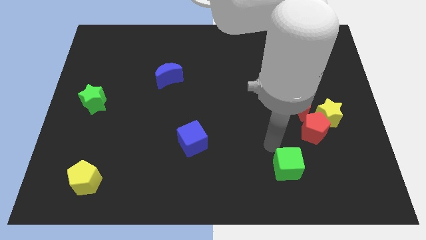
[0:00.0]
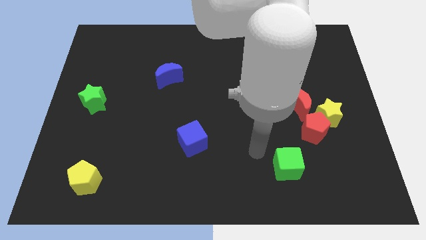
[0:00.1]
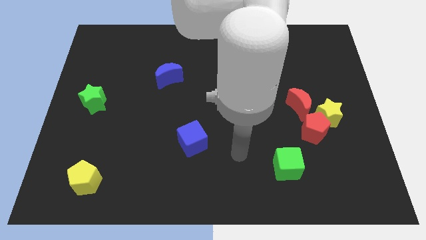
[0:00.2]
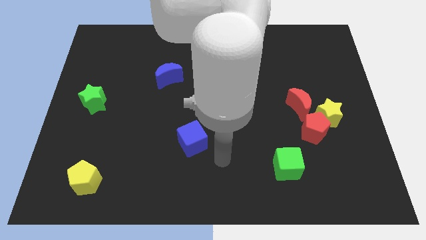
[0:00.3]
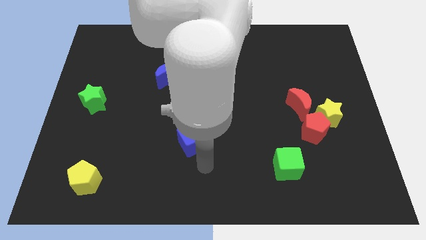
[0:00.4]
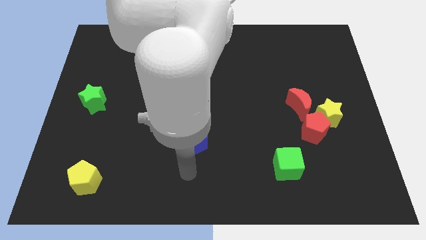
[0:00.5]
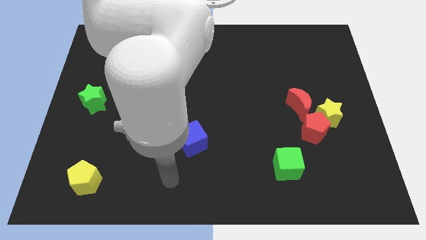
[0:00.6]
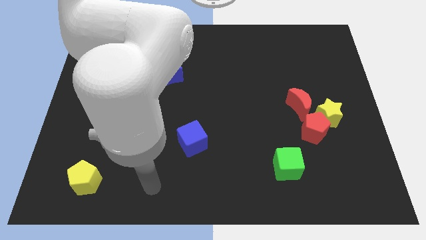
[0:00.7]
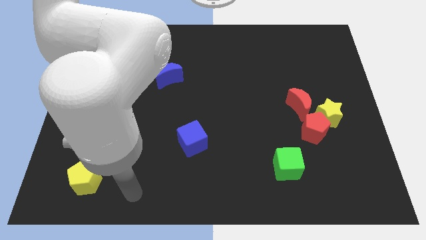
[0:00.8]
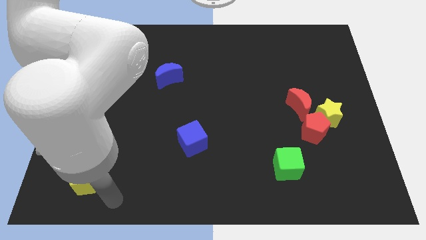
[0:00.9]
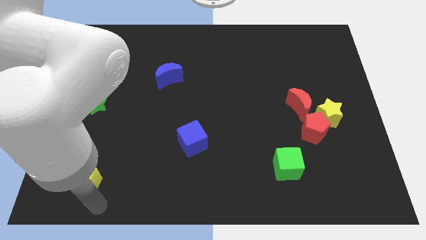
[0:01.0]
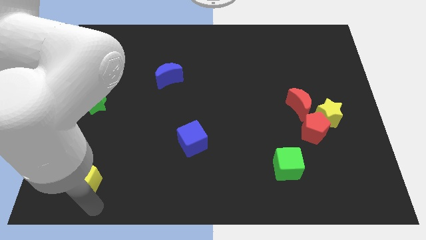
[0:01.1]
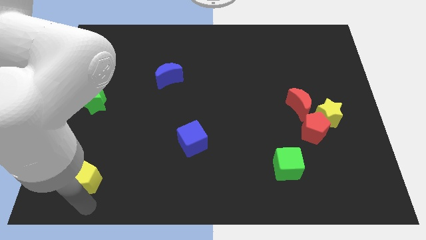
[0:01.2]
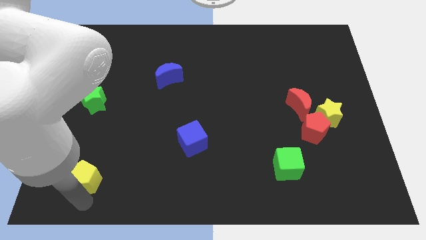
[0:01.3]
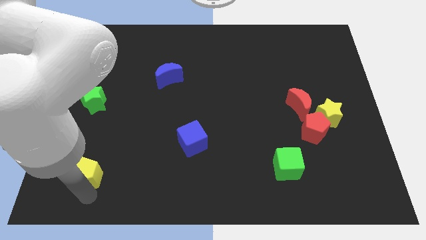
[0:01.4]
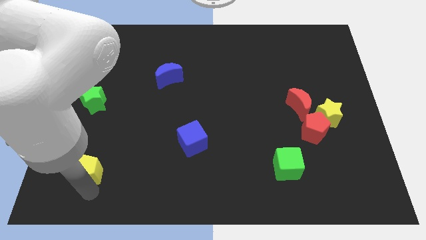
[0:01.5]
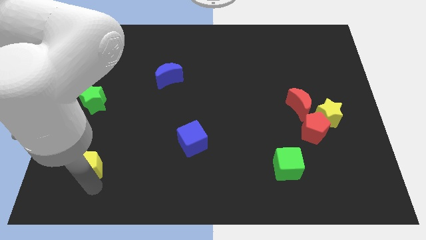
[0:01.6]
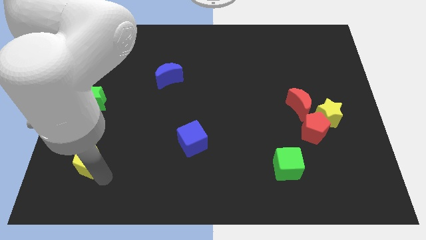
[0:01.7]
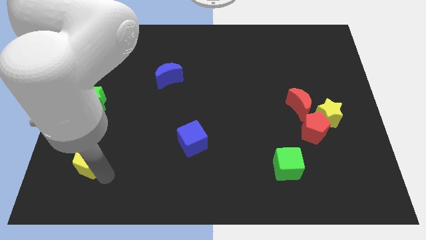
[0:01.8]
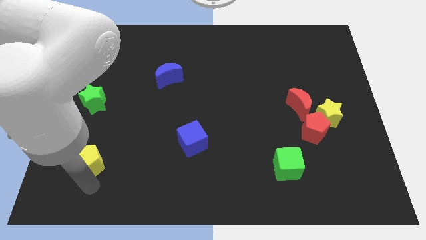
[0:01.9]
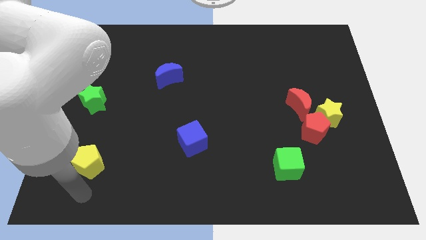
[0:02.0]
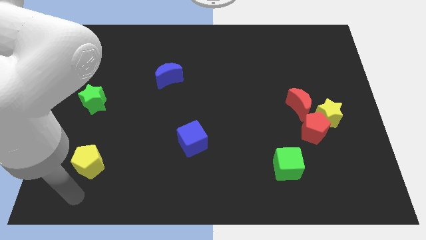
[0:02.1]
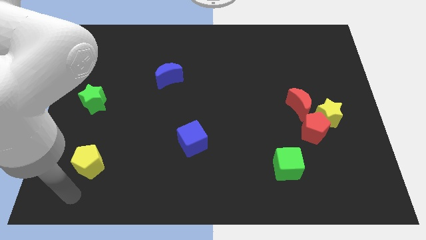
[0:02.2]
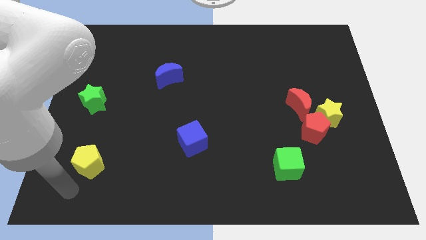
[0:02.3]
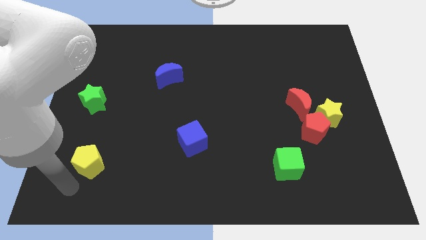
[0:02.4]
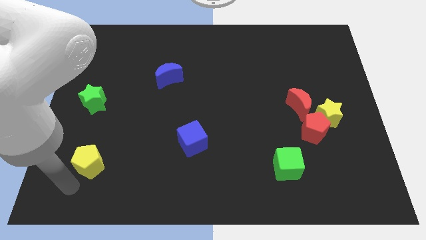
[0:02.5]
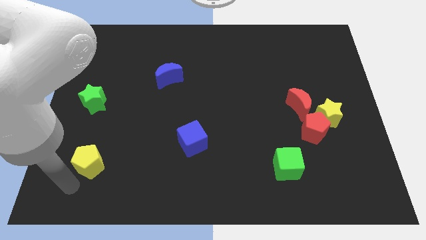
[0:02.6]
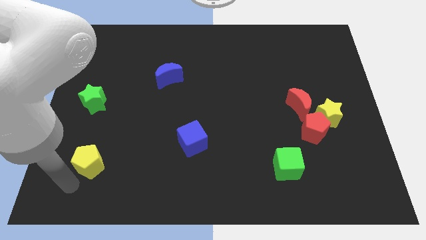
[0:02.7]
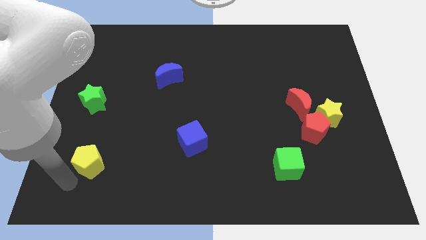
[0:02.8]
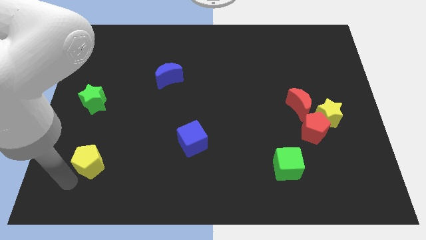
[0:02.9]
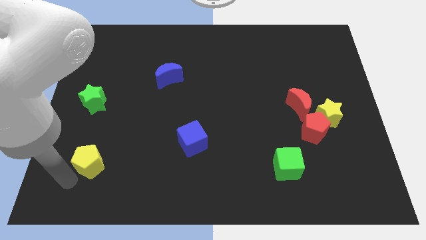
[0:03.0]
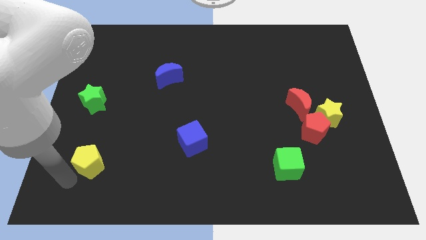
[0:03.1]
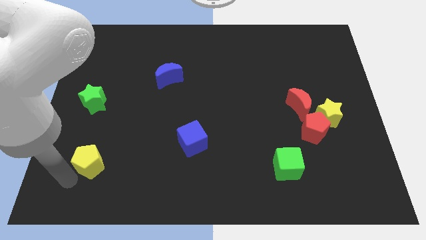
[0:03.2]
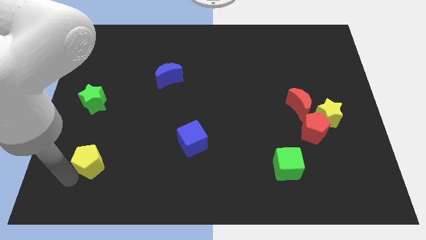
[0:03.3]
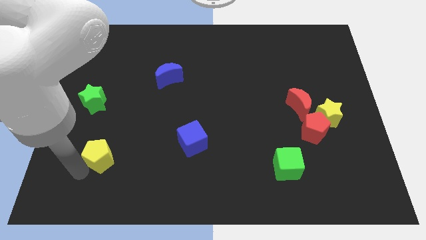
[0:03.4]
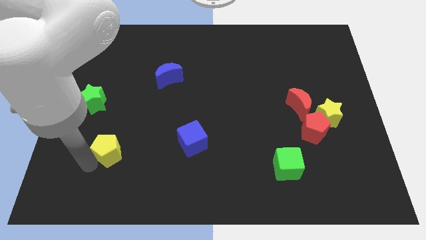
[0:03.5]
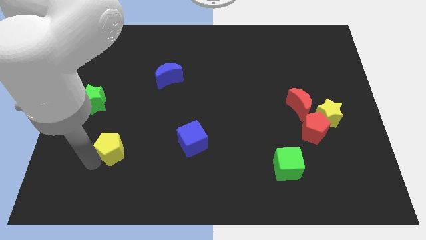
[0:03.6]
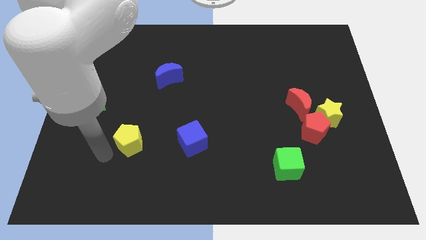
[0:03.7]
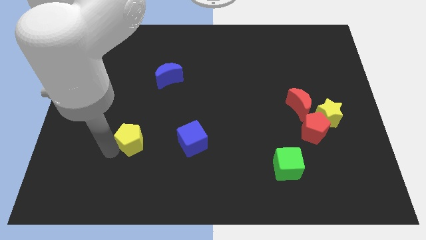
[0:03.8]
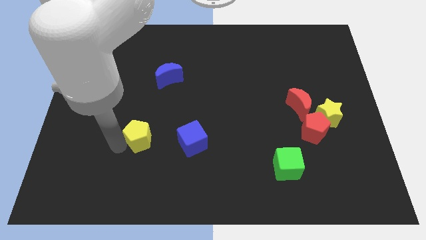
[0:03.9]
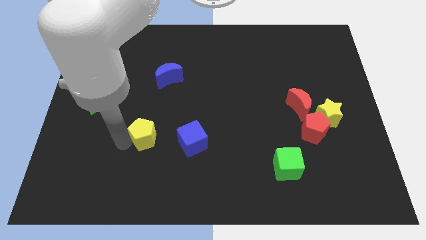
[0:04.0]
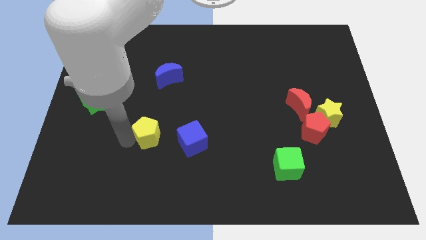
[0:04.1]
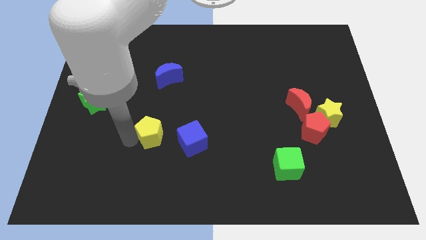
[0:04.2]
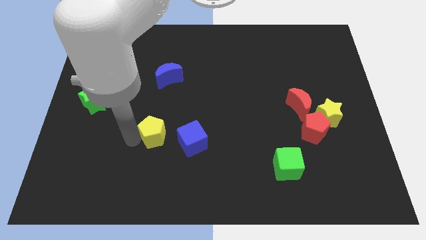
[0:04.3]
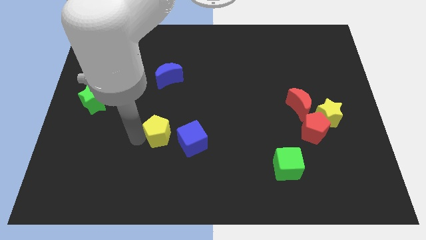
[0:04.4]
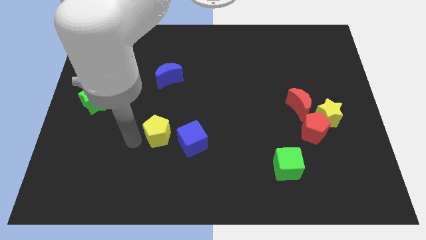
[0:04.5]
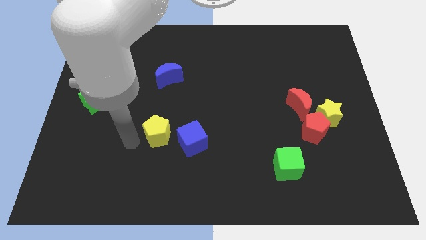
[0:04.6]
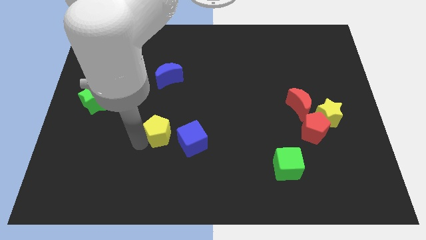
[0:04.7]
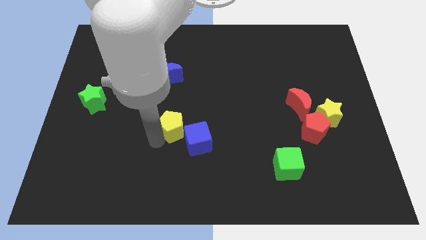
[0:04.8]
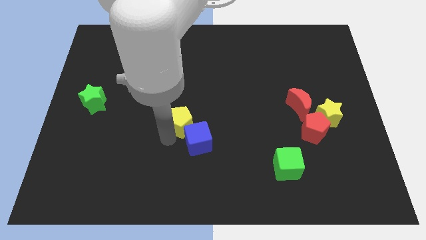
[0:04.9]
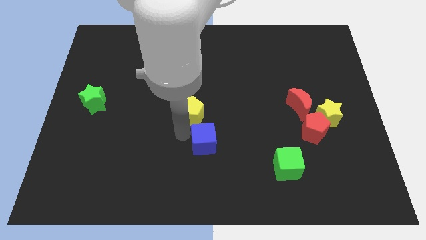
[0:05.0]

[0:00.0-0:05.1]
move the yellow pentagon at the top left of blue cube

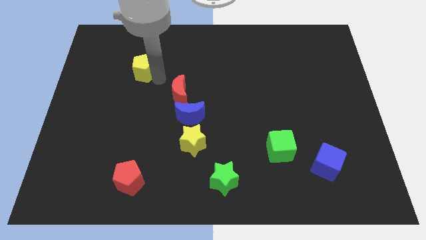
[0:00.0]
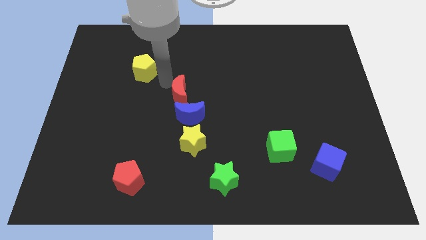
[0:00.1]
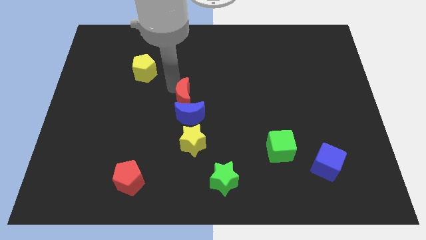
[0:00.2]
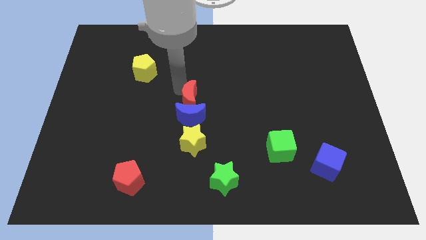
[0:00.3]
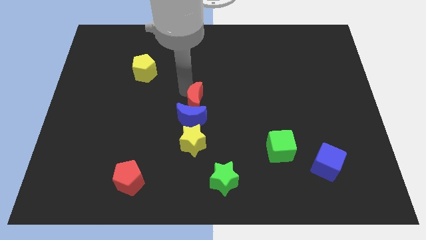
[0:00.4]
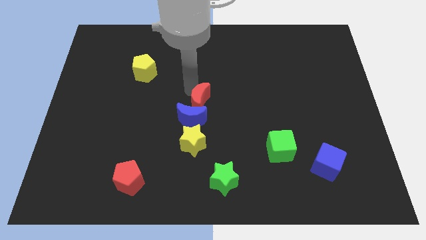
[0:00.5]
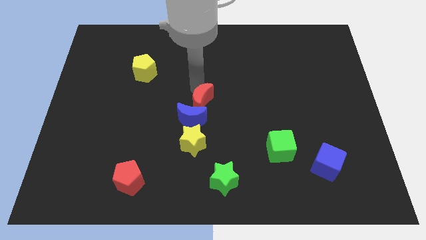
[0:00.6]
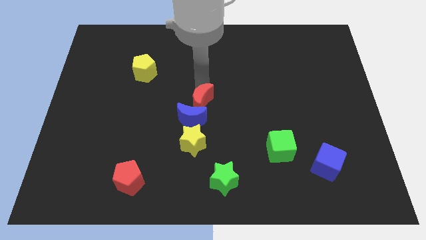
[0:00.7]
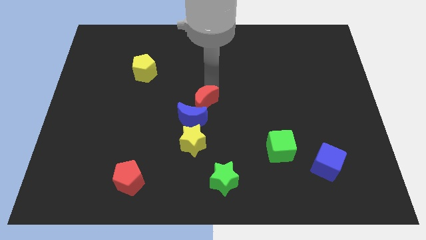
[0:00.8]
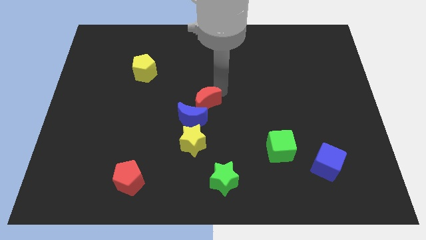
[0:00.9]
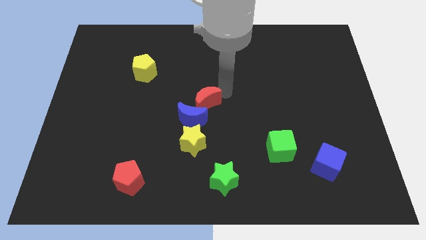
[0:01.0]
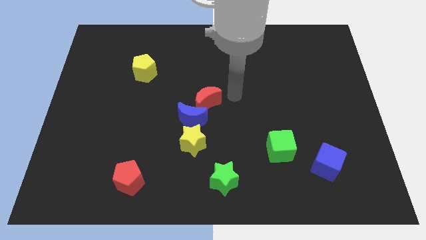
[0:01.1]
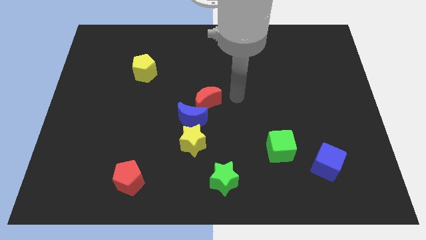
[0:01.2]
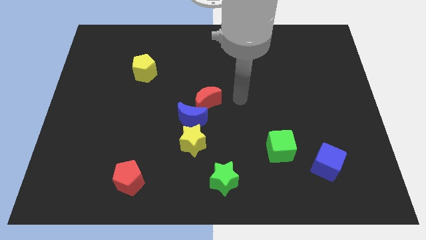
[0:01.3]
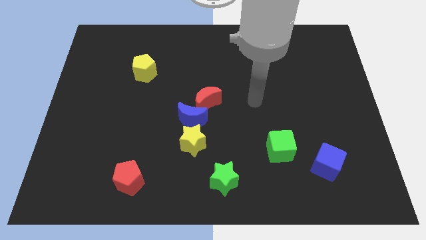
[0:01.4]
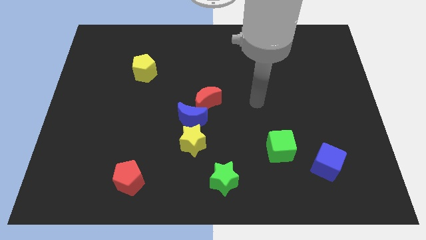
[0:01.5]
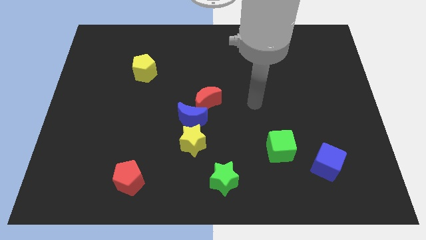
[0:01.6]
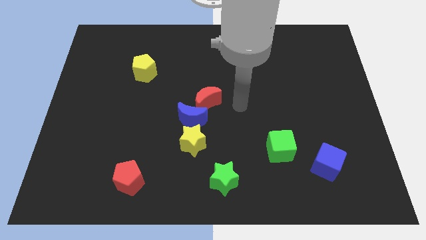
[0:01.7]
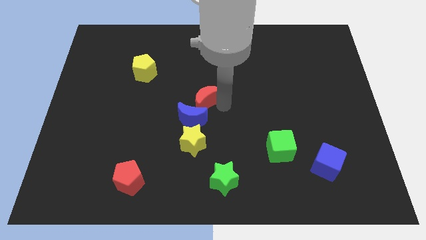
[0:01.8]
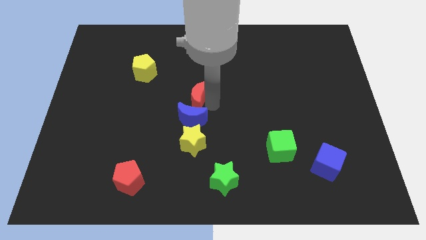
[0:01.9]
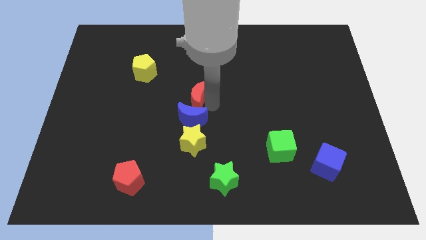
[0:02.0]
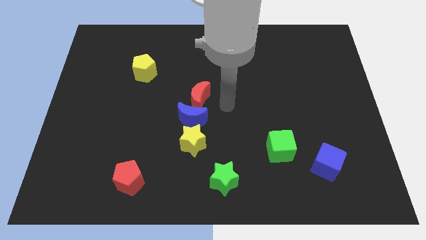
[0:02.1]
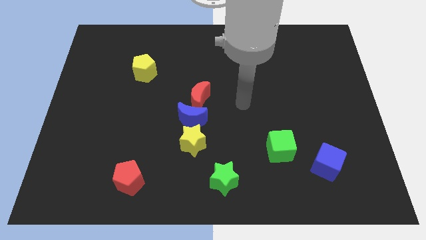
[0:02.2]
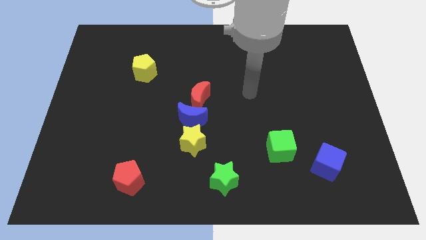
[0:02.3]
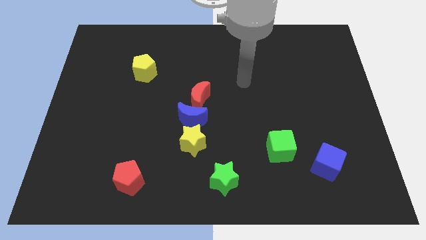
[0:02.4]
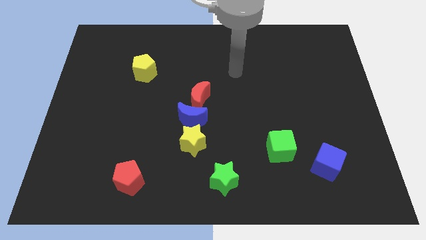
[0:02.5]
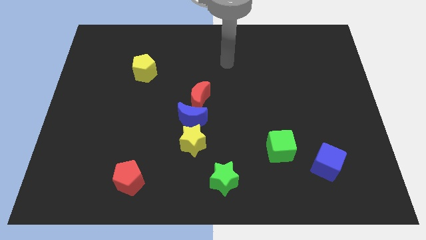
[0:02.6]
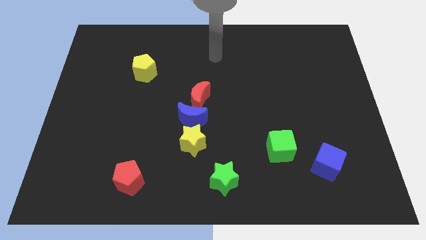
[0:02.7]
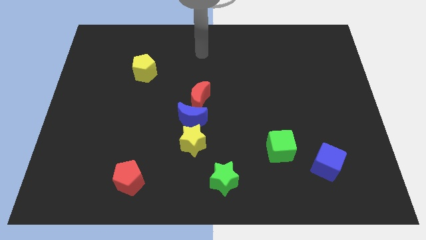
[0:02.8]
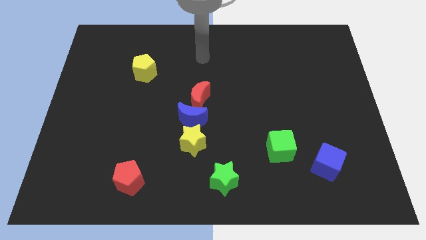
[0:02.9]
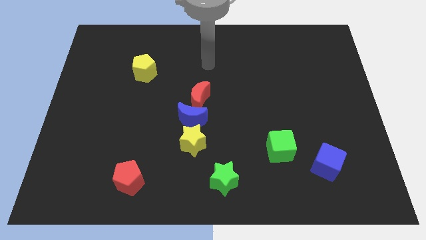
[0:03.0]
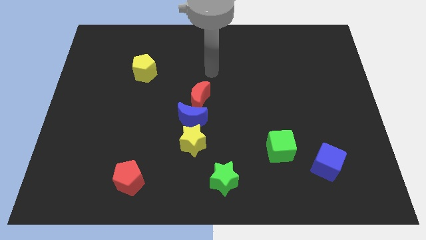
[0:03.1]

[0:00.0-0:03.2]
place the red crescent on the top right side of the blue moon

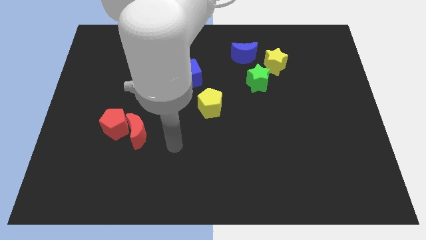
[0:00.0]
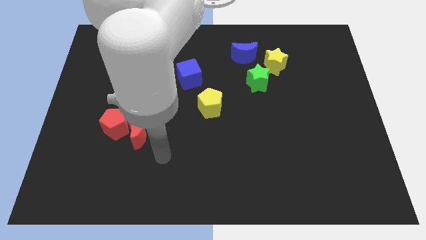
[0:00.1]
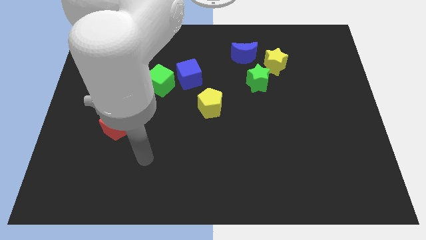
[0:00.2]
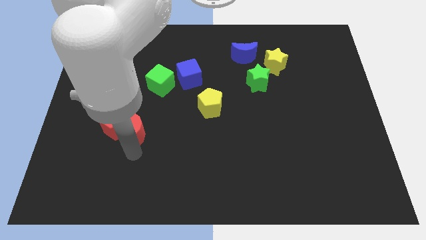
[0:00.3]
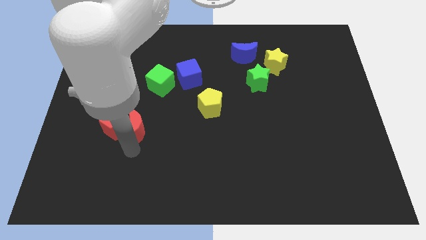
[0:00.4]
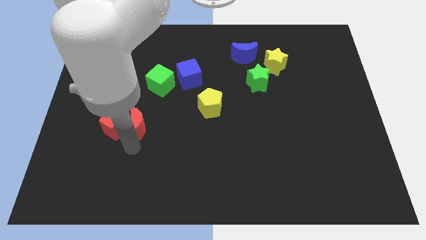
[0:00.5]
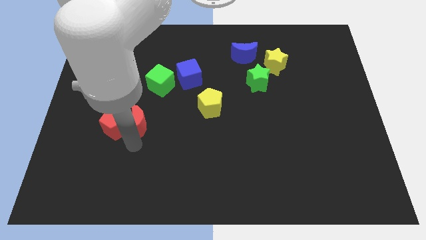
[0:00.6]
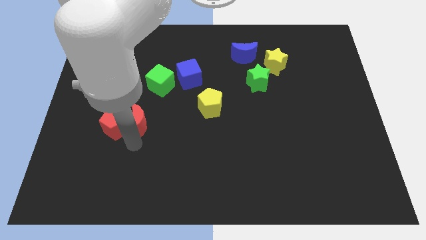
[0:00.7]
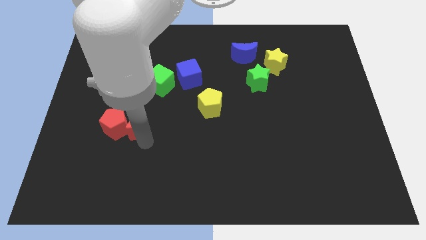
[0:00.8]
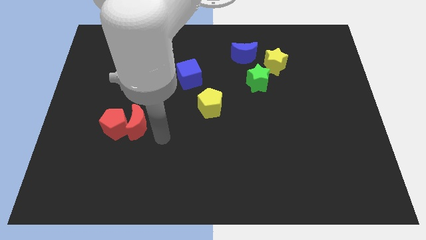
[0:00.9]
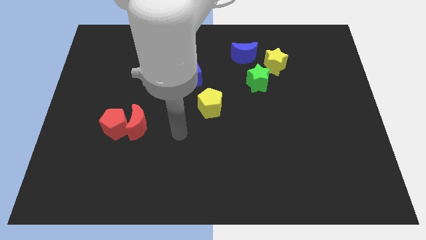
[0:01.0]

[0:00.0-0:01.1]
slightly push red moon towards top
